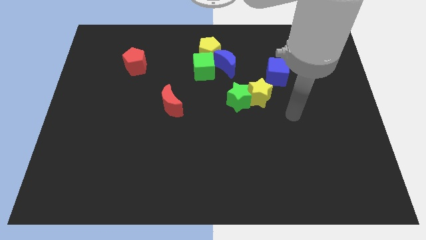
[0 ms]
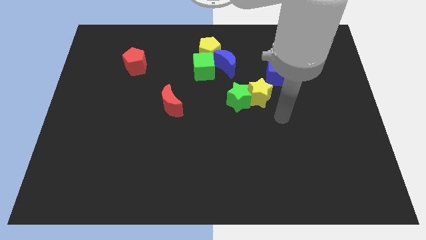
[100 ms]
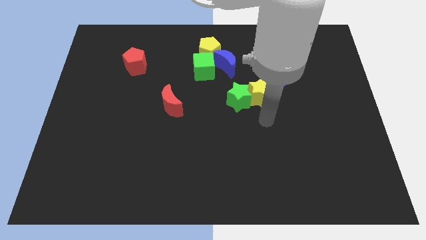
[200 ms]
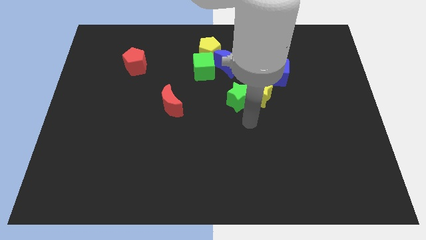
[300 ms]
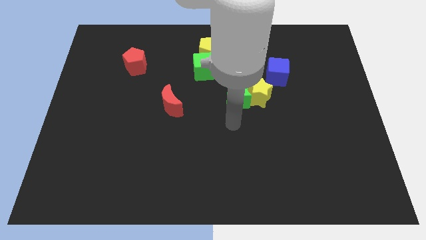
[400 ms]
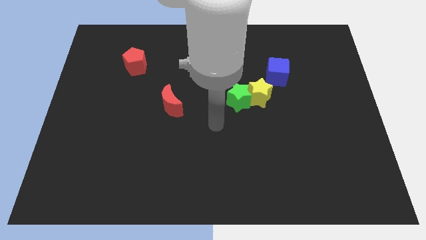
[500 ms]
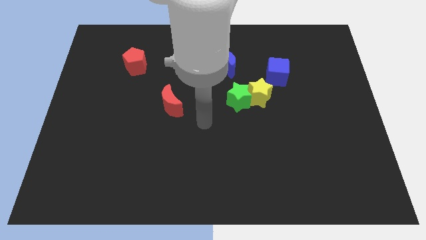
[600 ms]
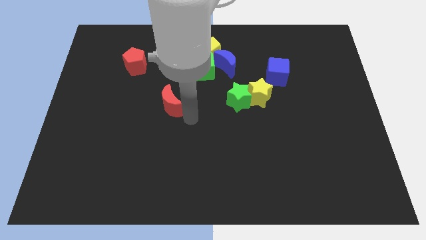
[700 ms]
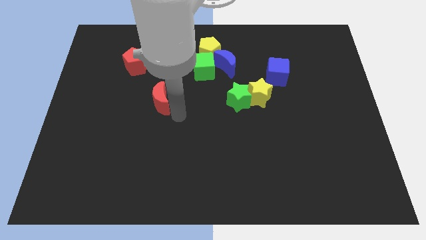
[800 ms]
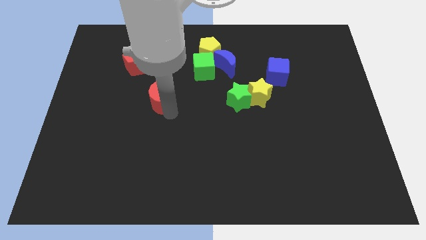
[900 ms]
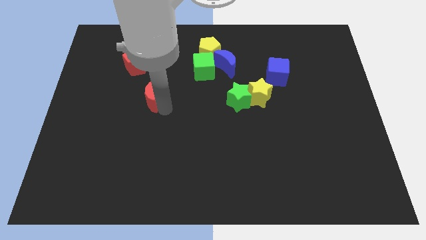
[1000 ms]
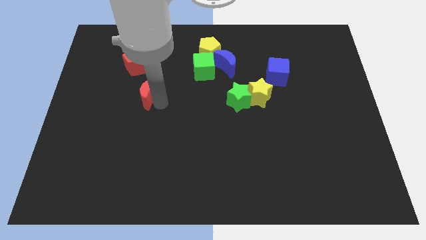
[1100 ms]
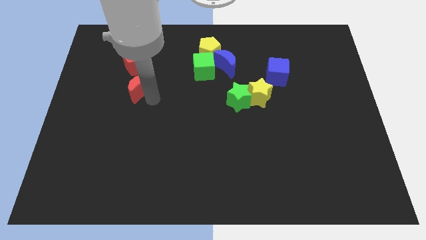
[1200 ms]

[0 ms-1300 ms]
move the red moon close to the red pentagon

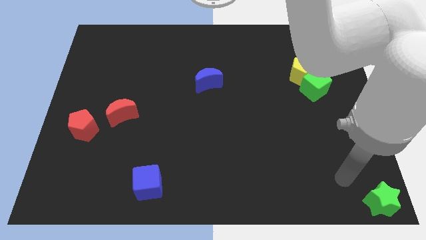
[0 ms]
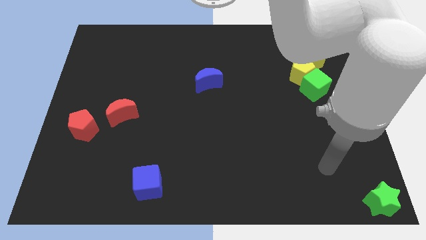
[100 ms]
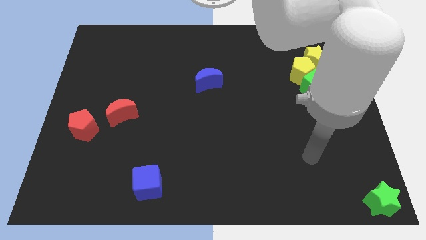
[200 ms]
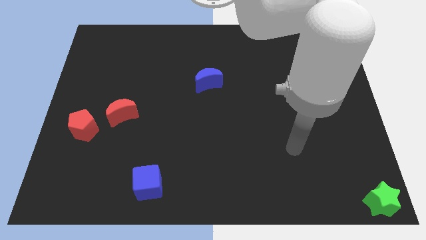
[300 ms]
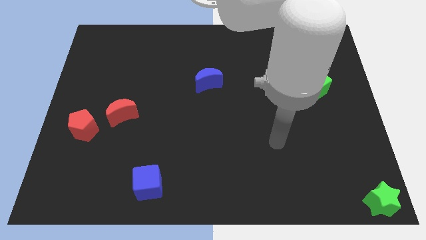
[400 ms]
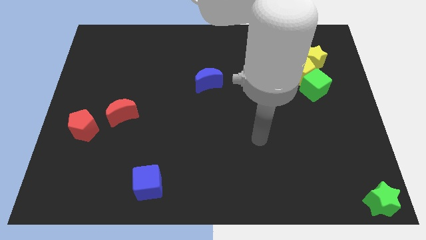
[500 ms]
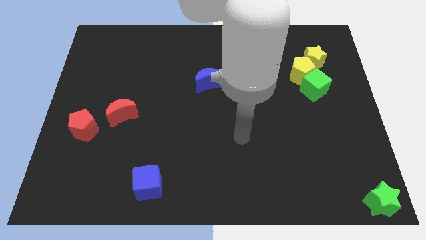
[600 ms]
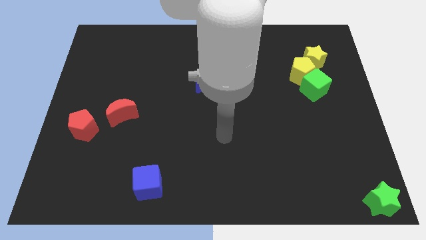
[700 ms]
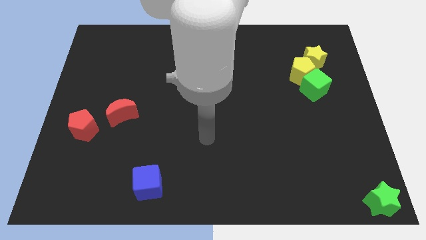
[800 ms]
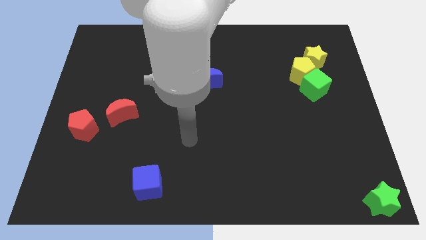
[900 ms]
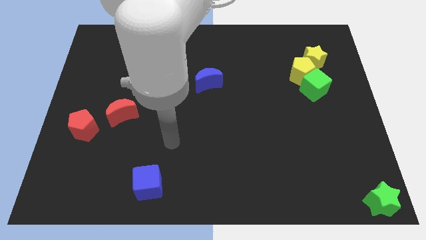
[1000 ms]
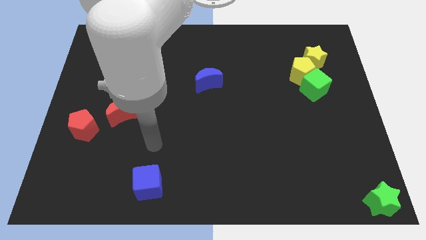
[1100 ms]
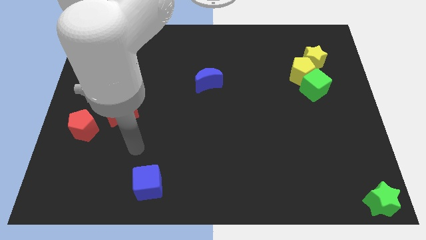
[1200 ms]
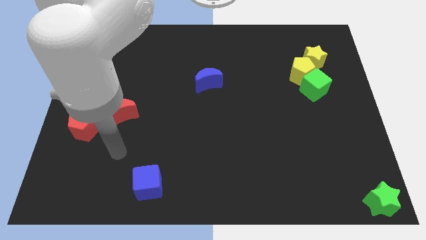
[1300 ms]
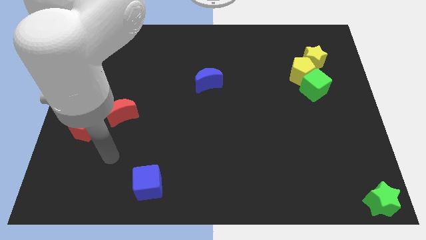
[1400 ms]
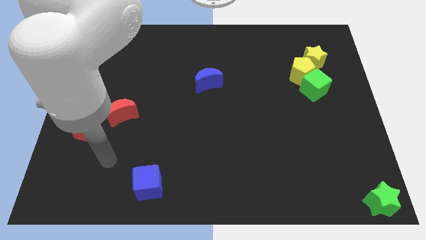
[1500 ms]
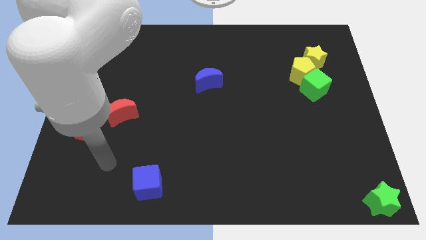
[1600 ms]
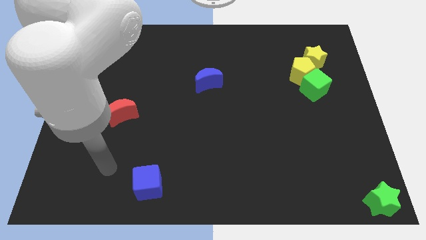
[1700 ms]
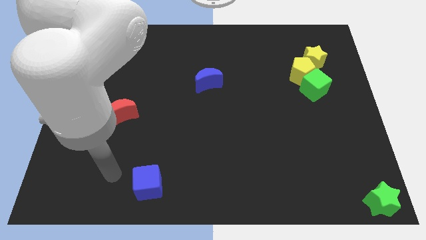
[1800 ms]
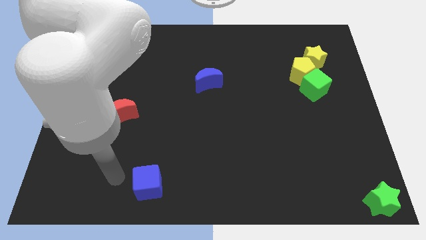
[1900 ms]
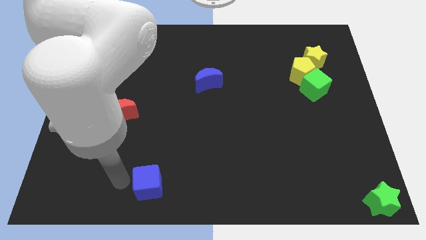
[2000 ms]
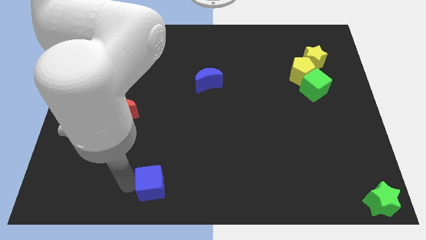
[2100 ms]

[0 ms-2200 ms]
move the arm to the left of the blue cube

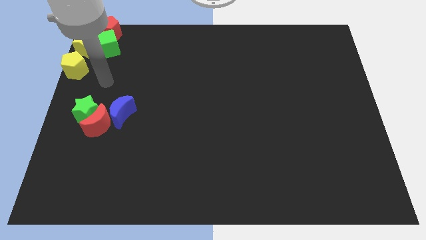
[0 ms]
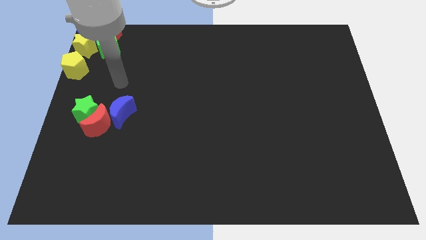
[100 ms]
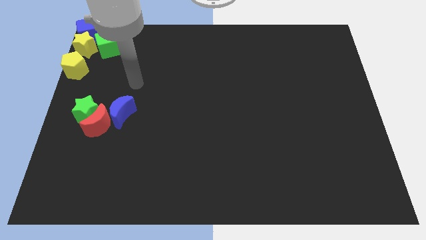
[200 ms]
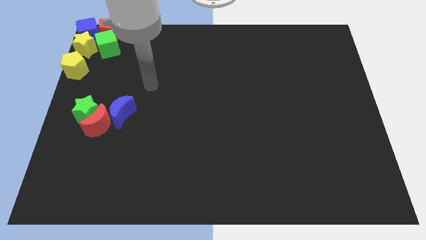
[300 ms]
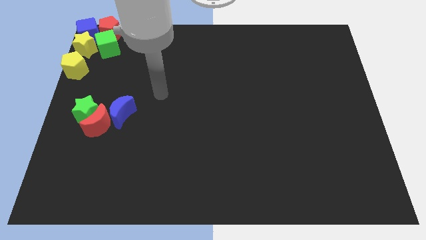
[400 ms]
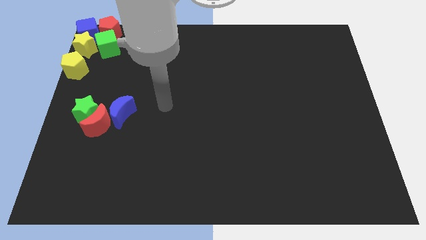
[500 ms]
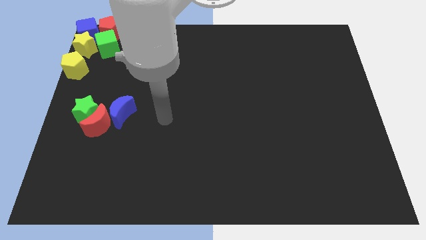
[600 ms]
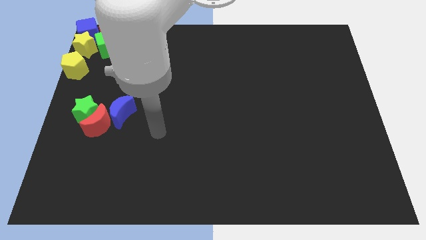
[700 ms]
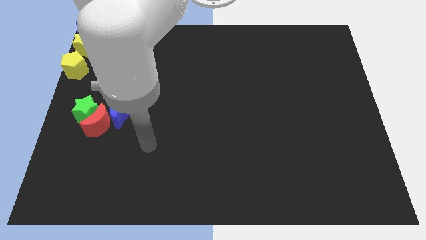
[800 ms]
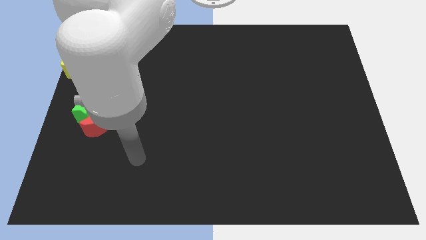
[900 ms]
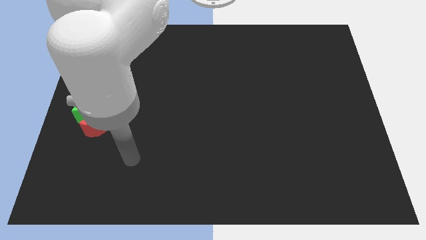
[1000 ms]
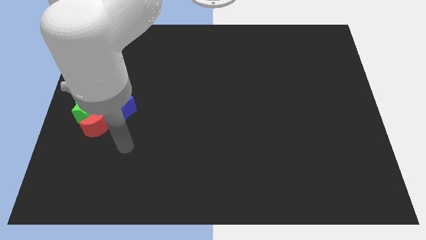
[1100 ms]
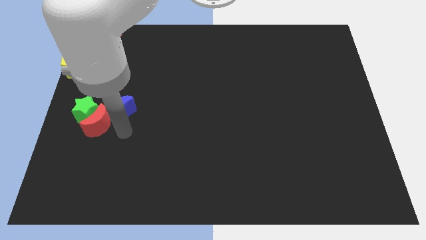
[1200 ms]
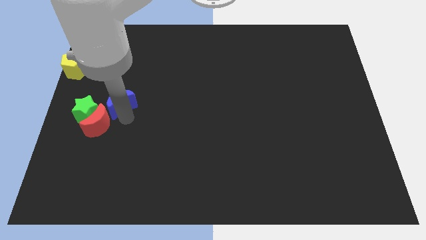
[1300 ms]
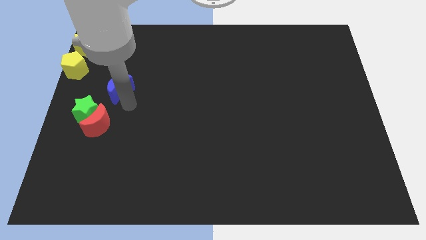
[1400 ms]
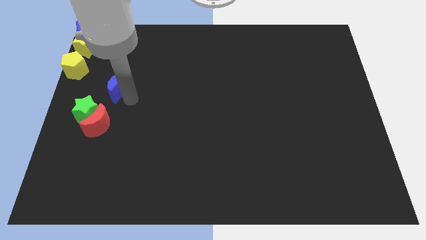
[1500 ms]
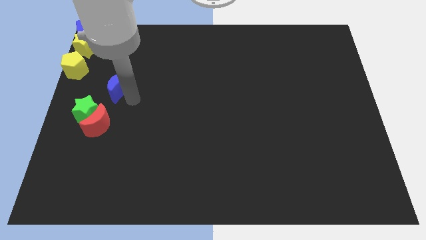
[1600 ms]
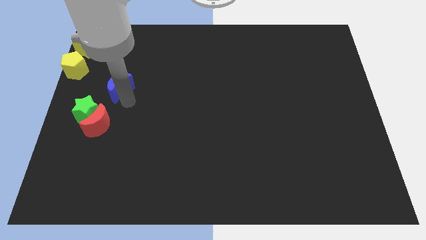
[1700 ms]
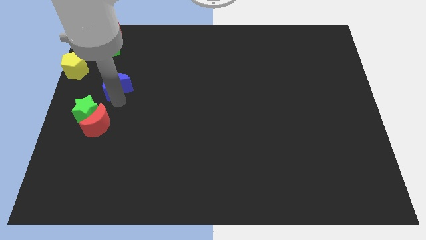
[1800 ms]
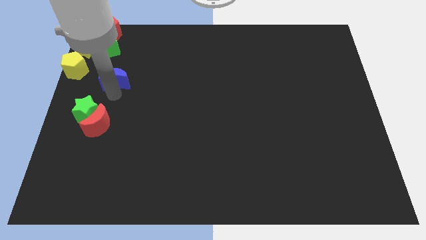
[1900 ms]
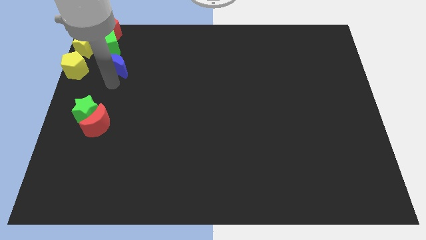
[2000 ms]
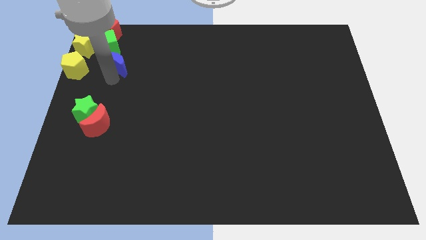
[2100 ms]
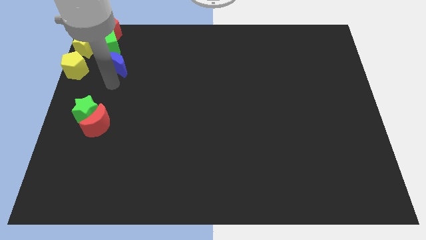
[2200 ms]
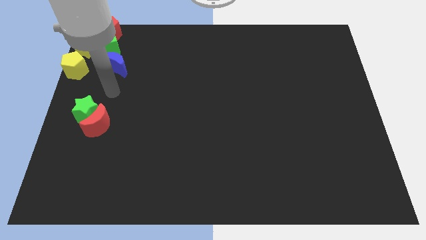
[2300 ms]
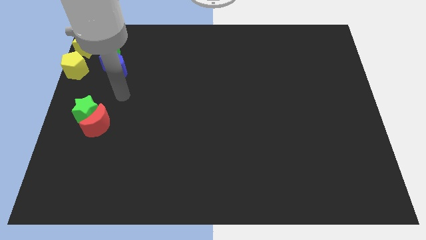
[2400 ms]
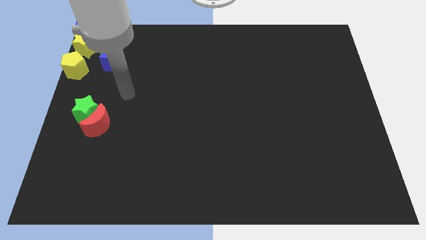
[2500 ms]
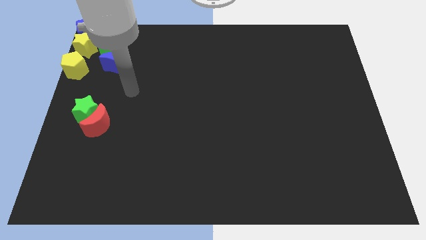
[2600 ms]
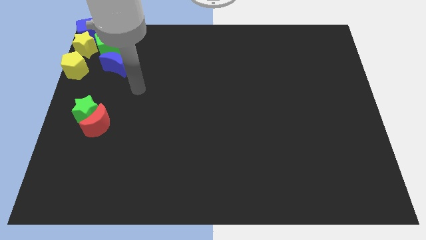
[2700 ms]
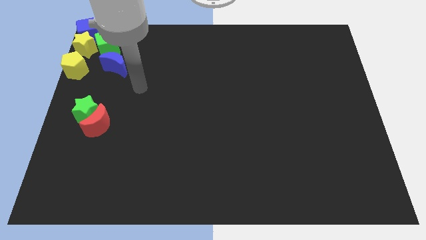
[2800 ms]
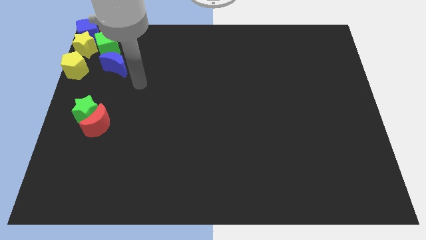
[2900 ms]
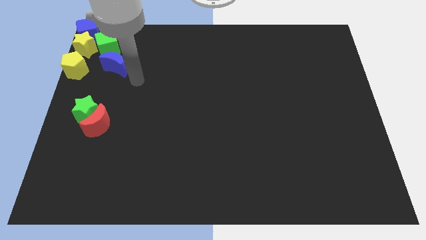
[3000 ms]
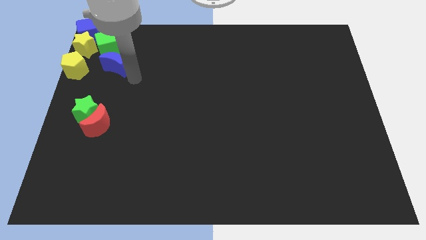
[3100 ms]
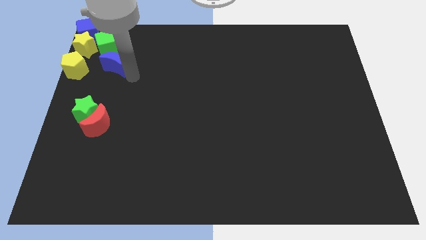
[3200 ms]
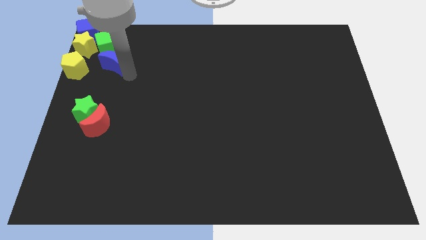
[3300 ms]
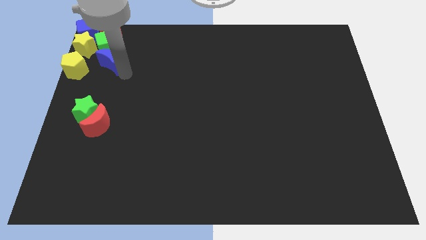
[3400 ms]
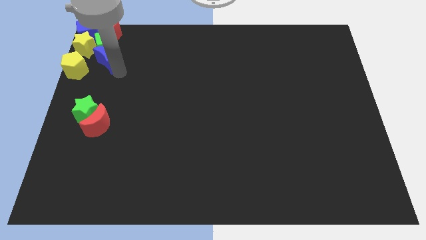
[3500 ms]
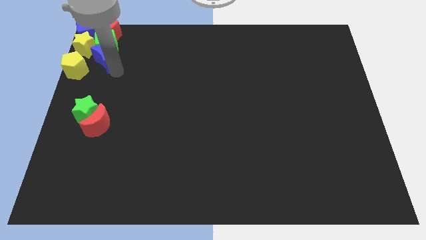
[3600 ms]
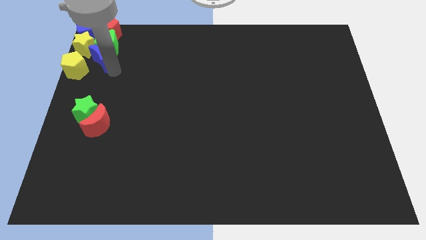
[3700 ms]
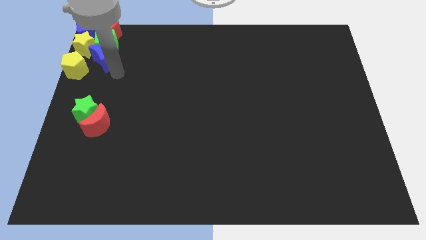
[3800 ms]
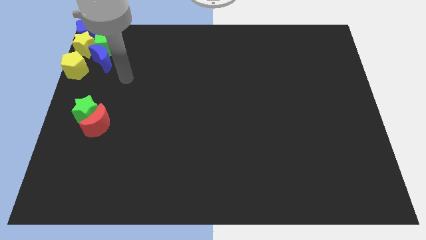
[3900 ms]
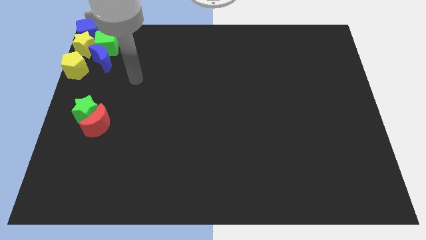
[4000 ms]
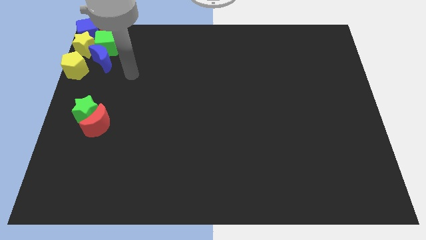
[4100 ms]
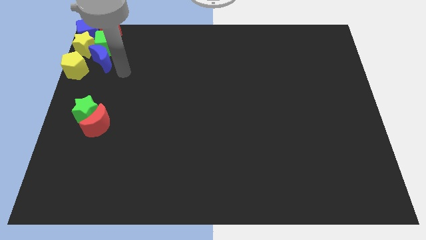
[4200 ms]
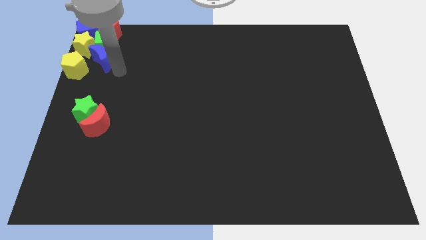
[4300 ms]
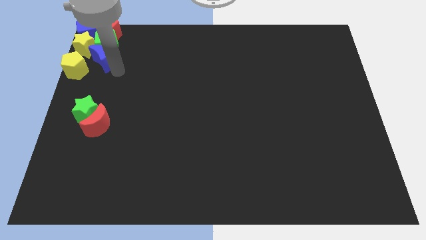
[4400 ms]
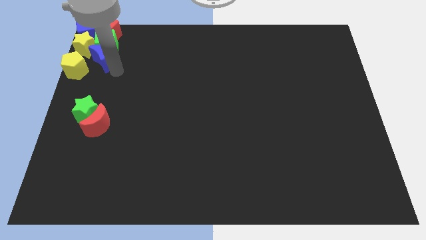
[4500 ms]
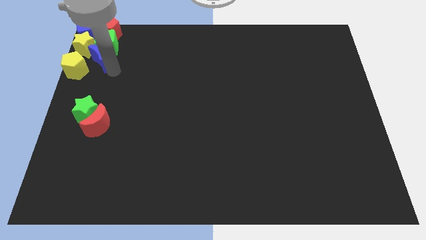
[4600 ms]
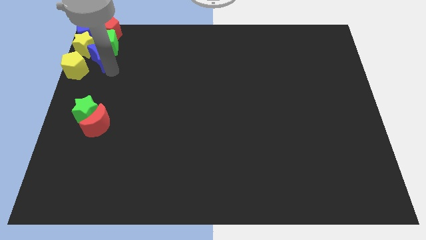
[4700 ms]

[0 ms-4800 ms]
move the blue crescent into the group of the blocks

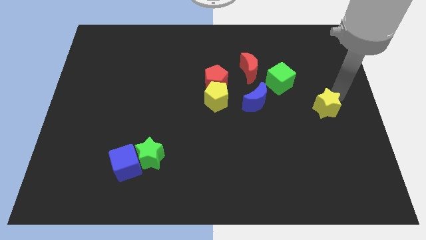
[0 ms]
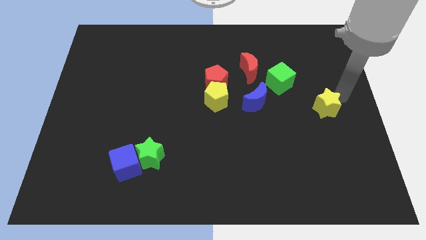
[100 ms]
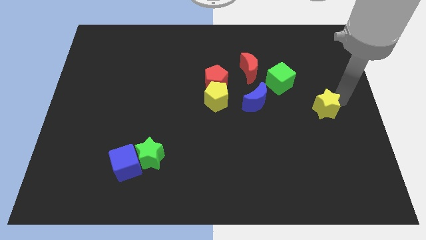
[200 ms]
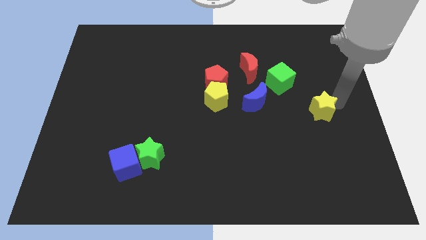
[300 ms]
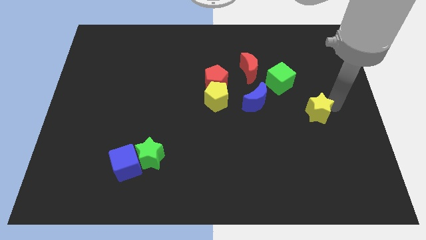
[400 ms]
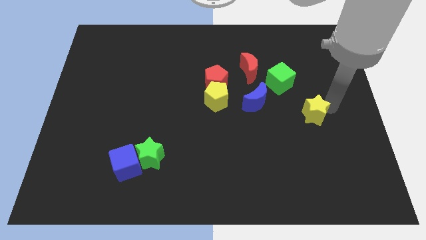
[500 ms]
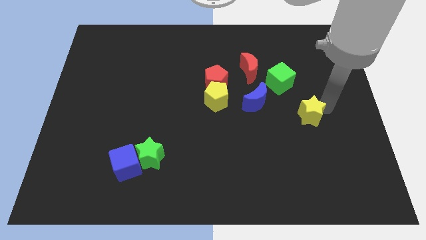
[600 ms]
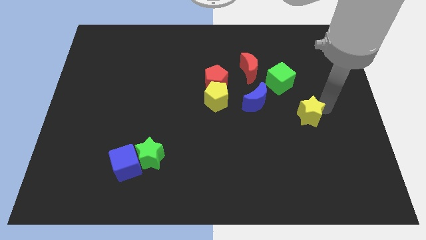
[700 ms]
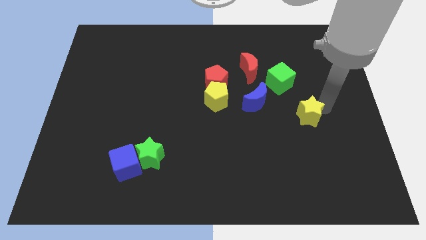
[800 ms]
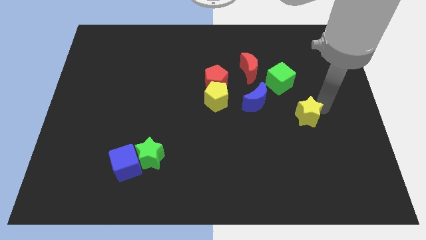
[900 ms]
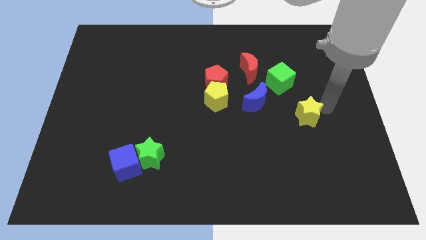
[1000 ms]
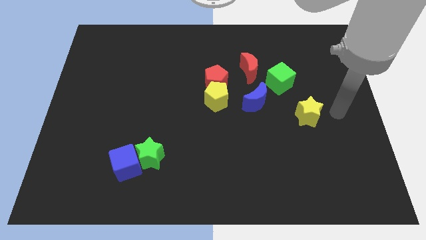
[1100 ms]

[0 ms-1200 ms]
place the yellow star diagonally bottom right to the green star
